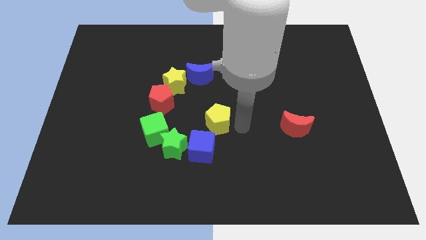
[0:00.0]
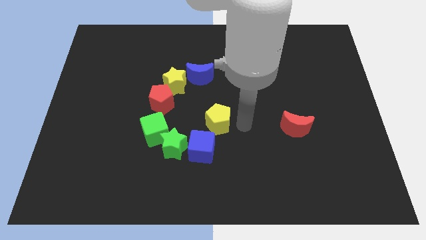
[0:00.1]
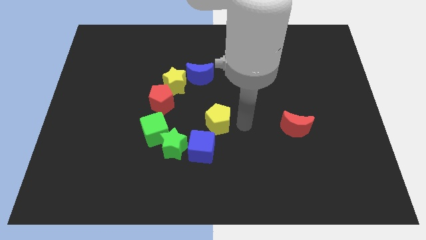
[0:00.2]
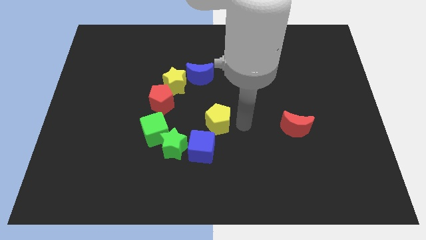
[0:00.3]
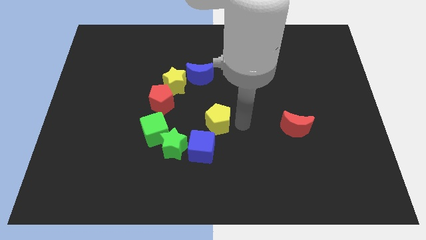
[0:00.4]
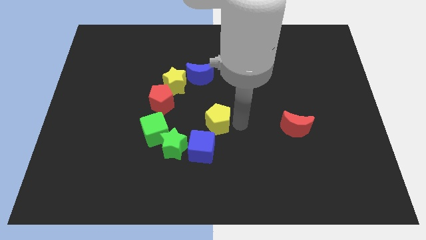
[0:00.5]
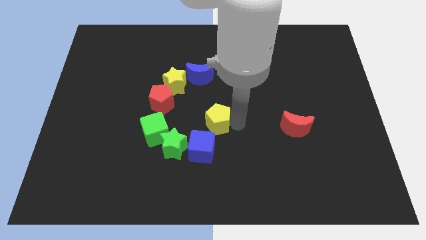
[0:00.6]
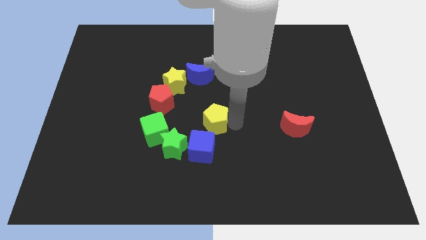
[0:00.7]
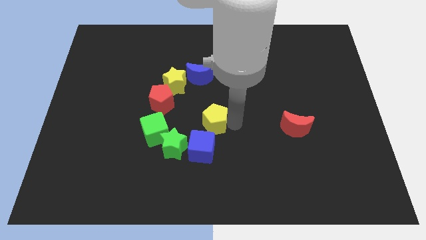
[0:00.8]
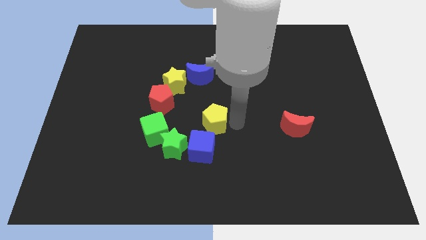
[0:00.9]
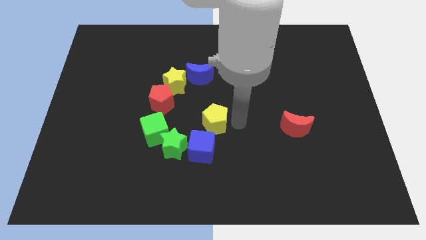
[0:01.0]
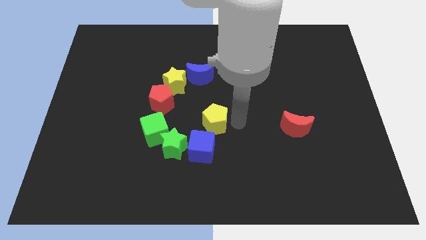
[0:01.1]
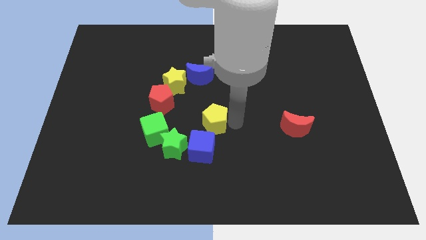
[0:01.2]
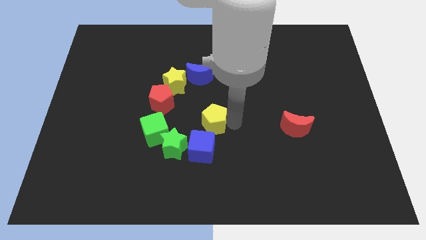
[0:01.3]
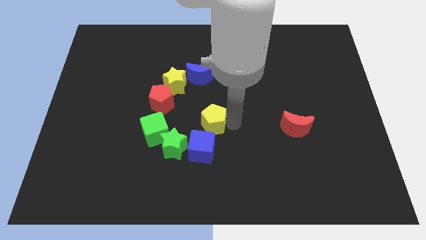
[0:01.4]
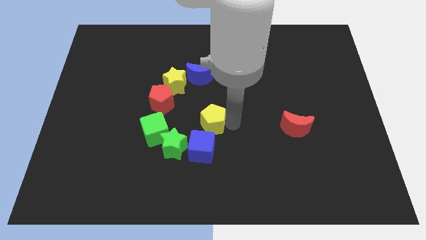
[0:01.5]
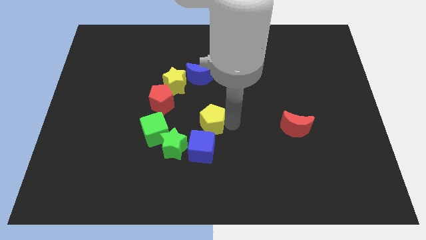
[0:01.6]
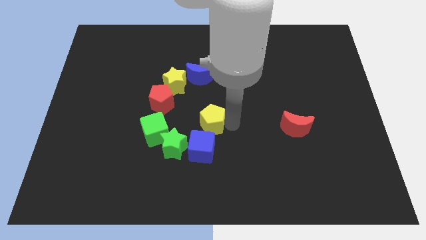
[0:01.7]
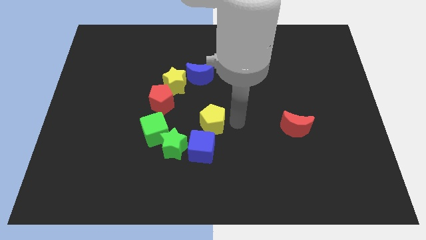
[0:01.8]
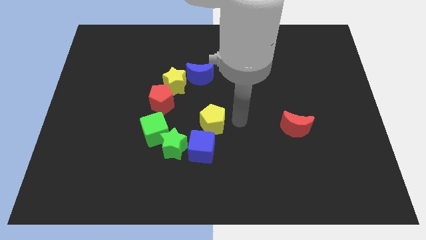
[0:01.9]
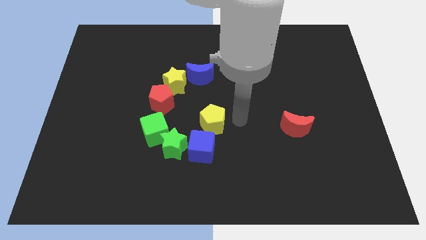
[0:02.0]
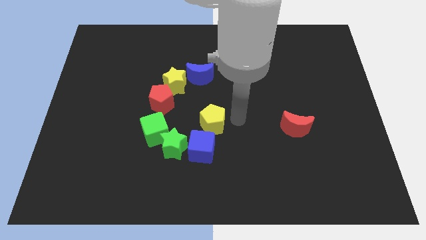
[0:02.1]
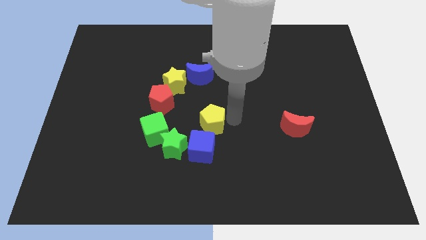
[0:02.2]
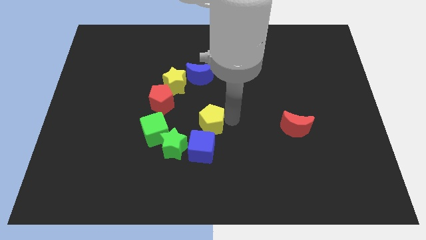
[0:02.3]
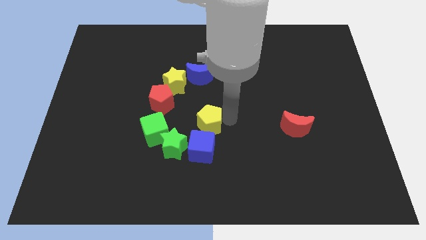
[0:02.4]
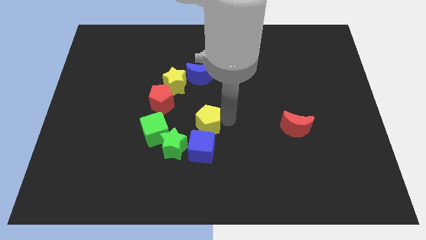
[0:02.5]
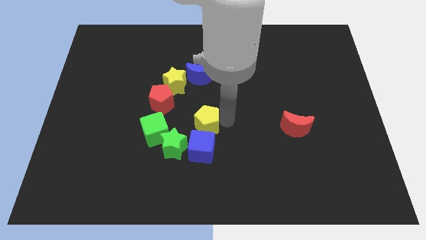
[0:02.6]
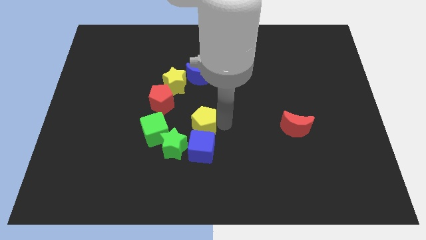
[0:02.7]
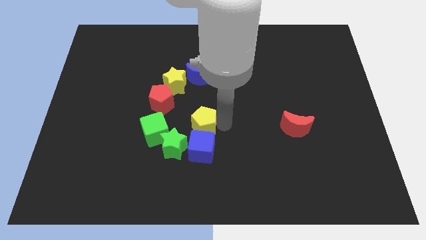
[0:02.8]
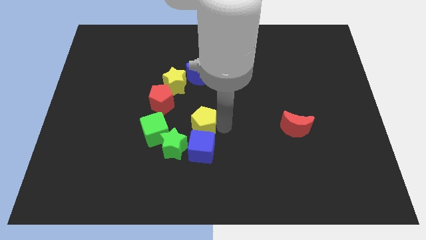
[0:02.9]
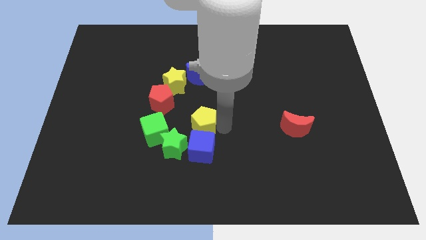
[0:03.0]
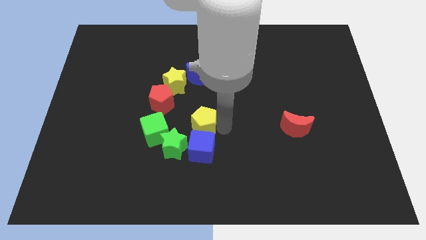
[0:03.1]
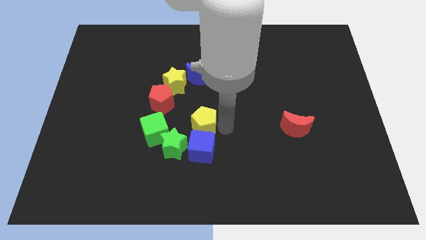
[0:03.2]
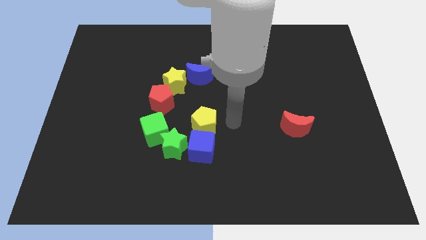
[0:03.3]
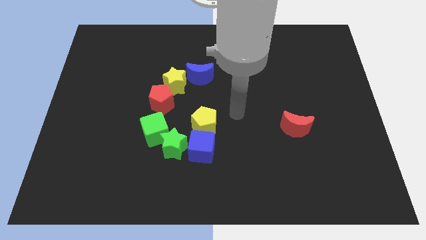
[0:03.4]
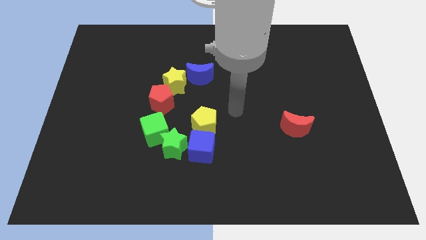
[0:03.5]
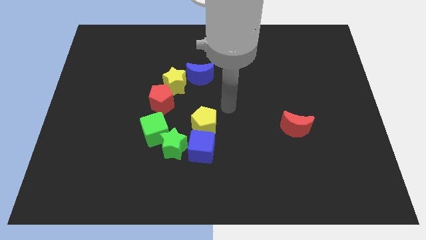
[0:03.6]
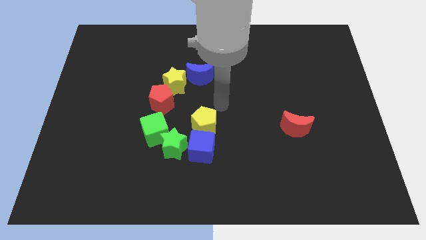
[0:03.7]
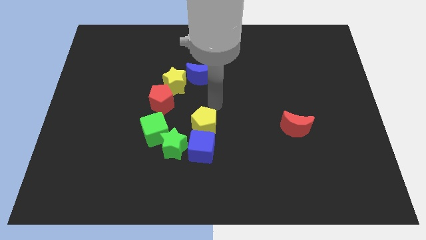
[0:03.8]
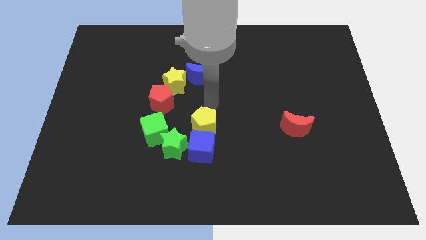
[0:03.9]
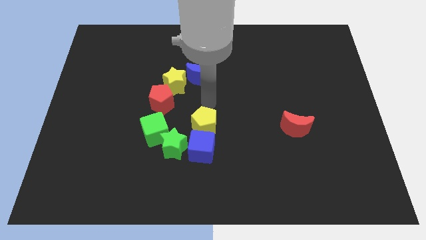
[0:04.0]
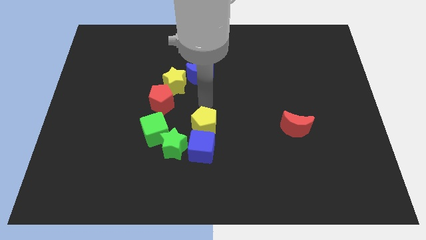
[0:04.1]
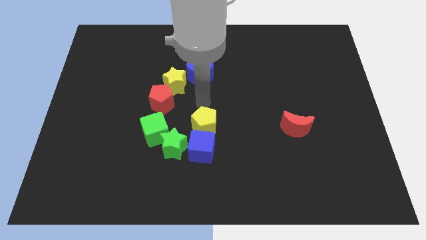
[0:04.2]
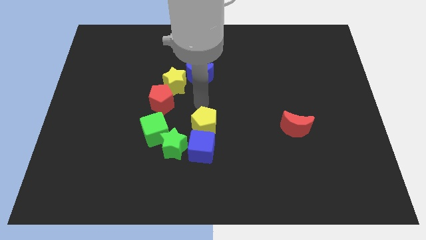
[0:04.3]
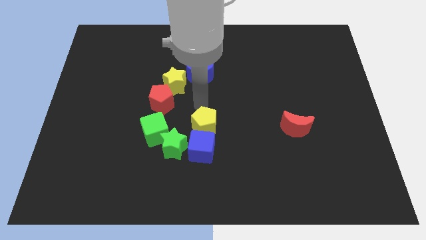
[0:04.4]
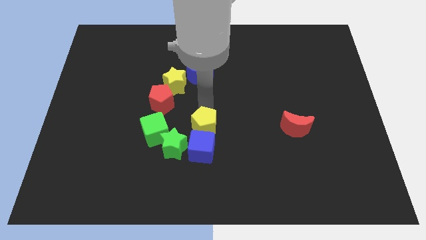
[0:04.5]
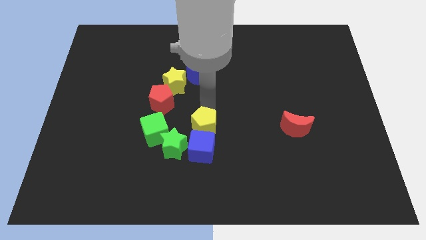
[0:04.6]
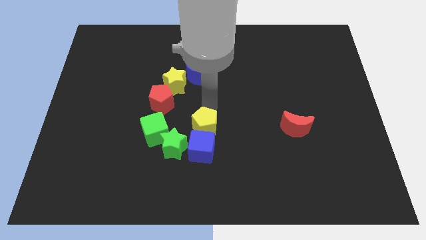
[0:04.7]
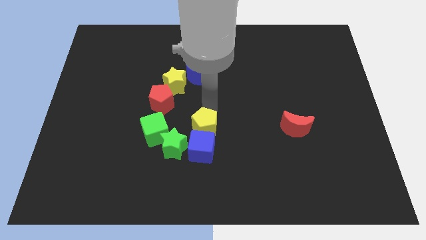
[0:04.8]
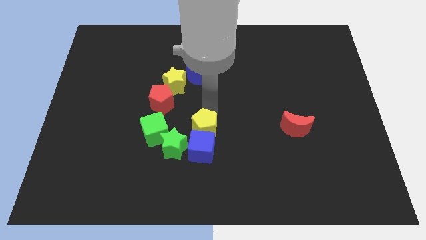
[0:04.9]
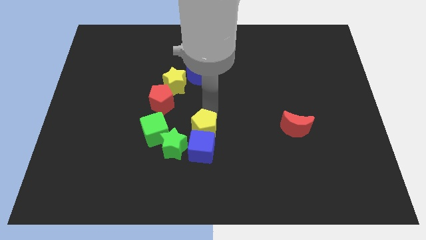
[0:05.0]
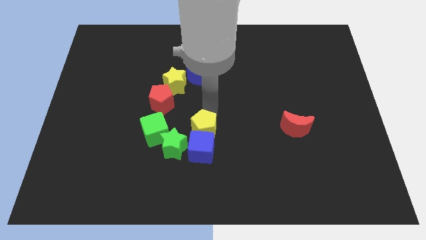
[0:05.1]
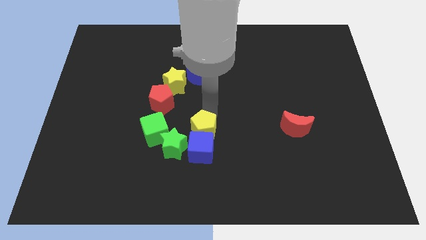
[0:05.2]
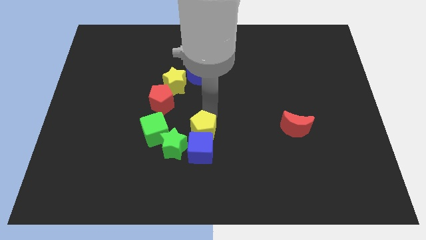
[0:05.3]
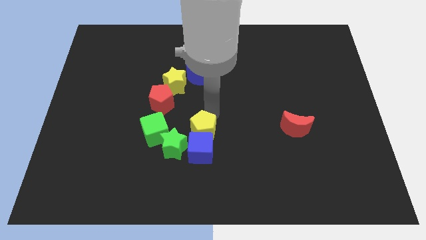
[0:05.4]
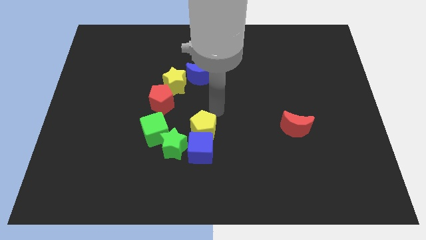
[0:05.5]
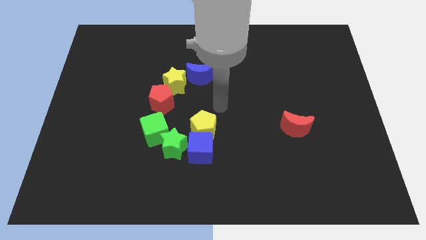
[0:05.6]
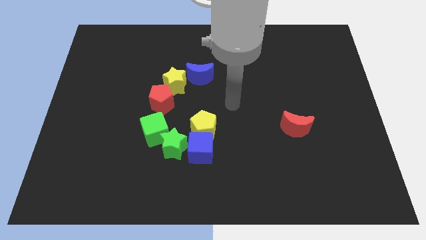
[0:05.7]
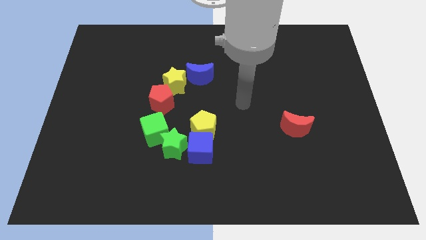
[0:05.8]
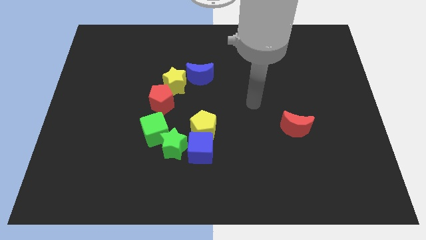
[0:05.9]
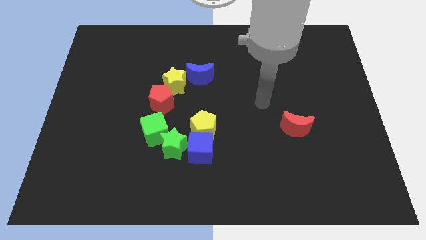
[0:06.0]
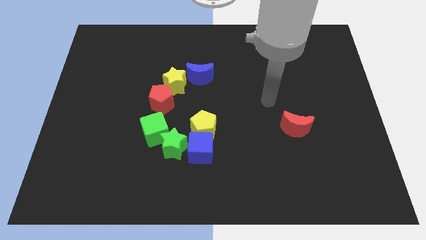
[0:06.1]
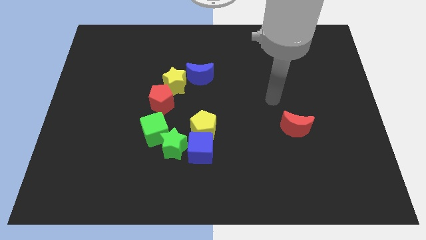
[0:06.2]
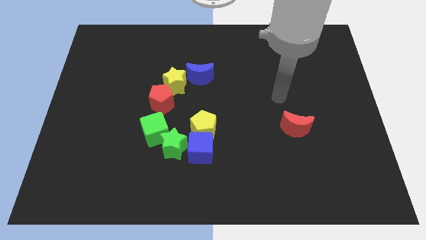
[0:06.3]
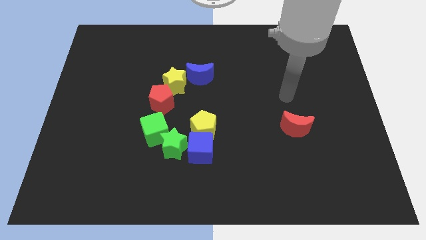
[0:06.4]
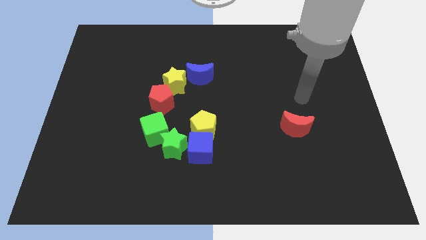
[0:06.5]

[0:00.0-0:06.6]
push the yellow pentagon into the blue cube

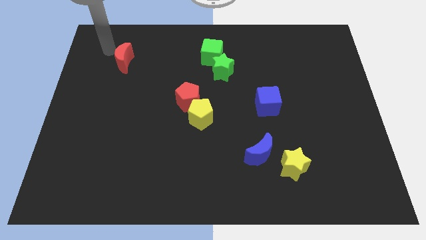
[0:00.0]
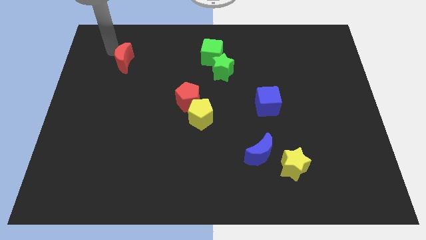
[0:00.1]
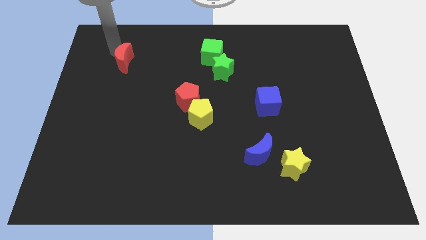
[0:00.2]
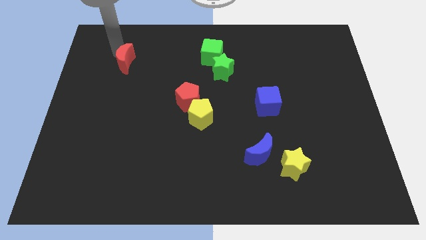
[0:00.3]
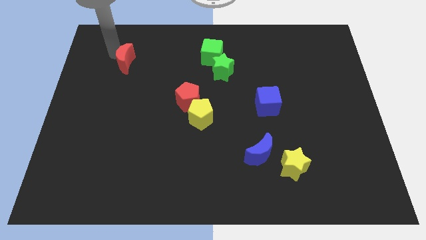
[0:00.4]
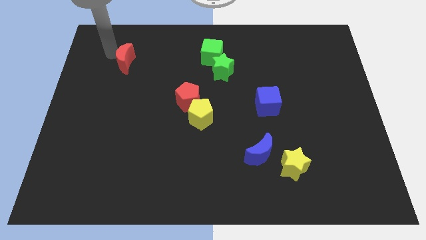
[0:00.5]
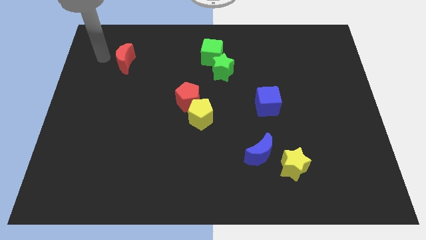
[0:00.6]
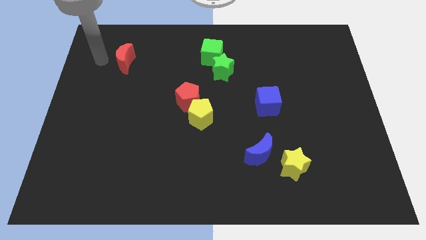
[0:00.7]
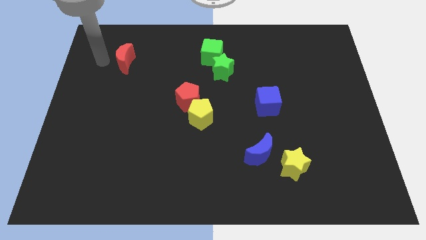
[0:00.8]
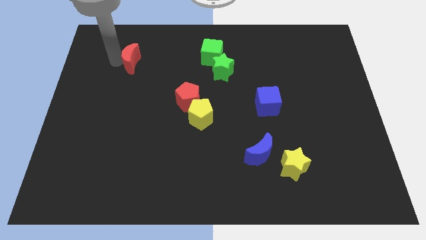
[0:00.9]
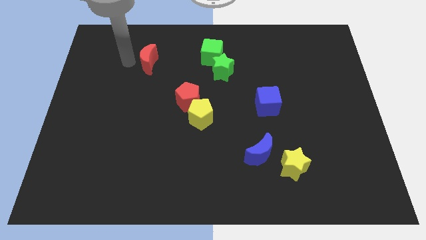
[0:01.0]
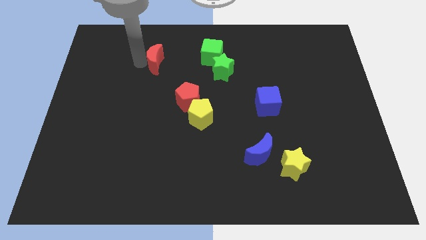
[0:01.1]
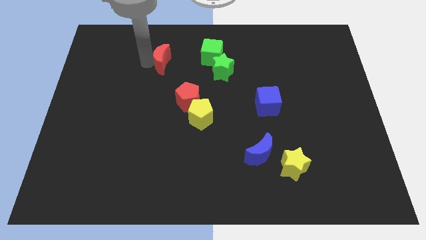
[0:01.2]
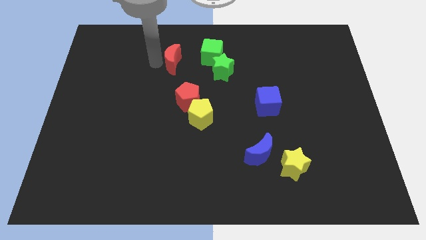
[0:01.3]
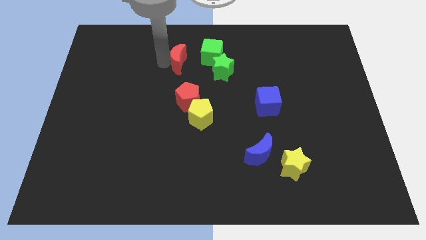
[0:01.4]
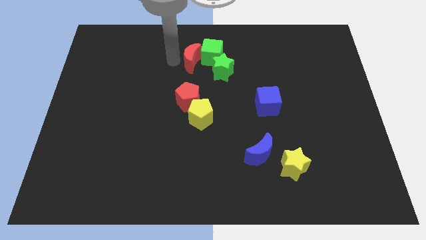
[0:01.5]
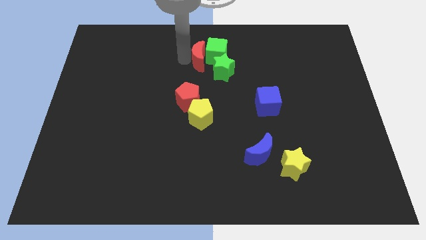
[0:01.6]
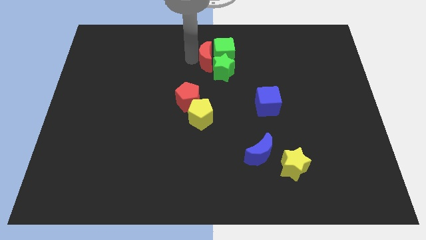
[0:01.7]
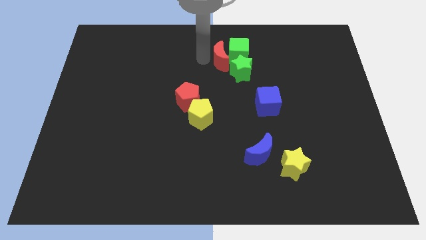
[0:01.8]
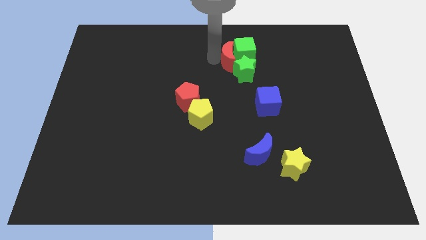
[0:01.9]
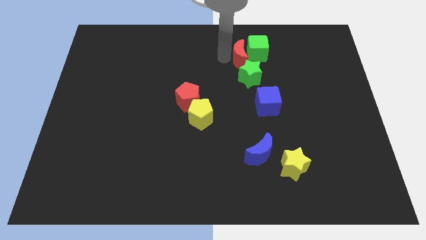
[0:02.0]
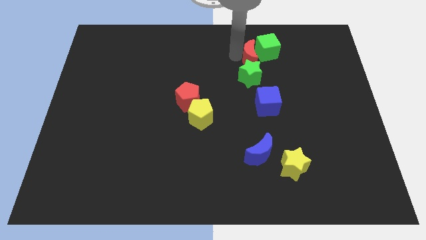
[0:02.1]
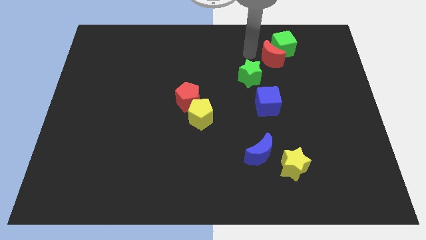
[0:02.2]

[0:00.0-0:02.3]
push the red moon into green cube
